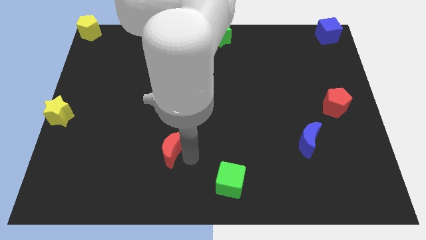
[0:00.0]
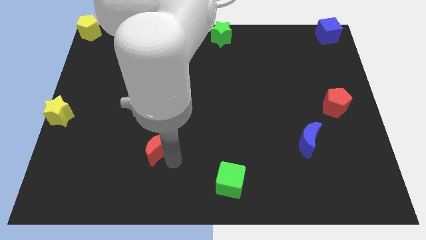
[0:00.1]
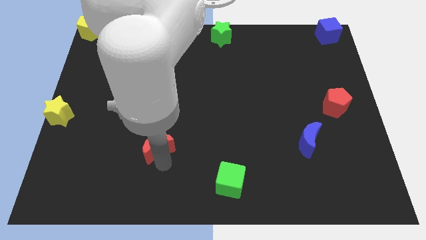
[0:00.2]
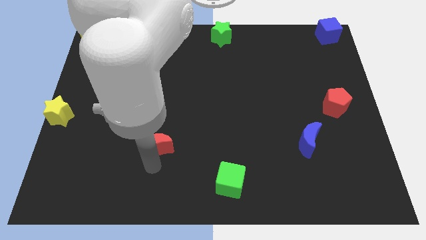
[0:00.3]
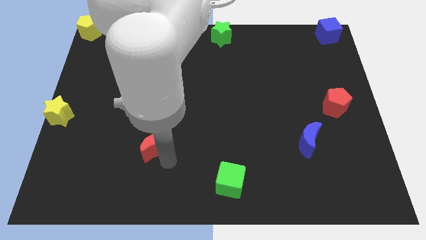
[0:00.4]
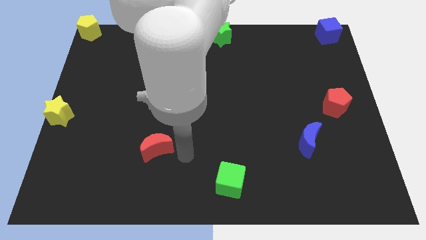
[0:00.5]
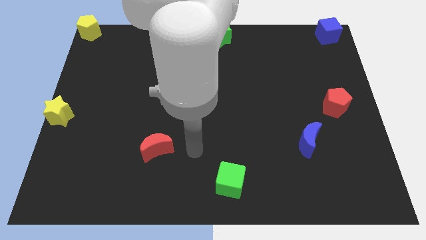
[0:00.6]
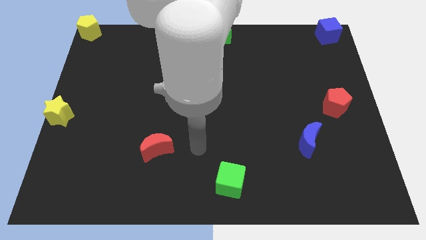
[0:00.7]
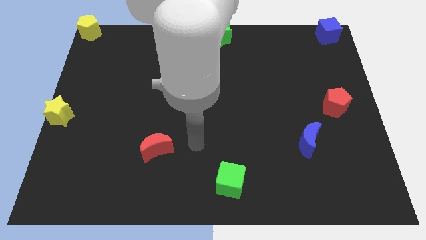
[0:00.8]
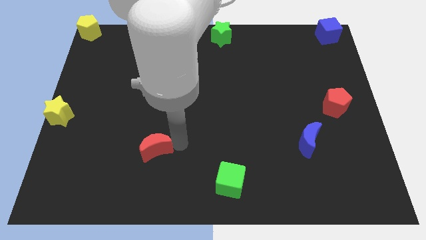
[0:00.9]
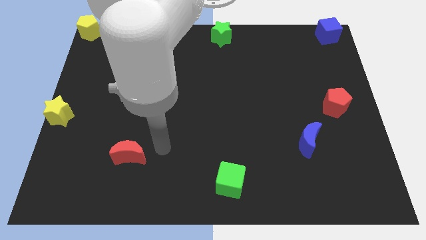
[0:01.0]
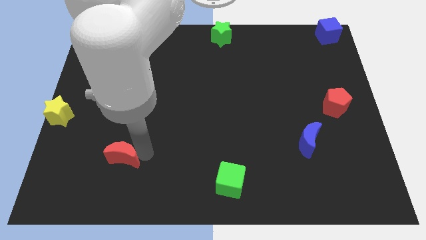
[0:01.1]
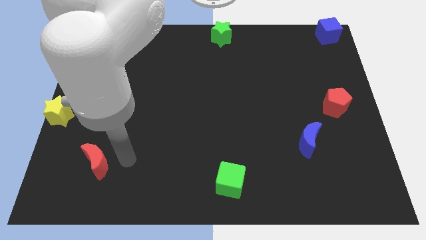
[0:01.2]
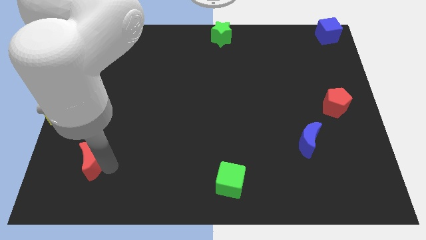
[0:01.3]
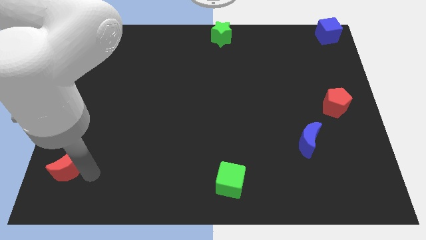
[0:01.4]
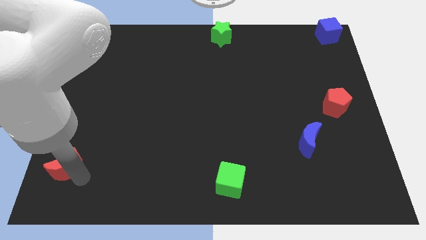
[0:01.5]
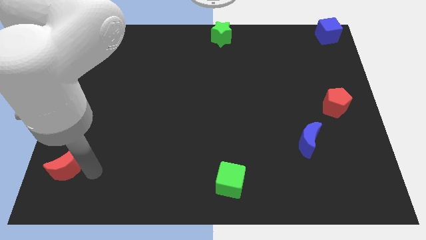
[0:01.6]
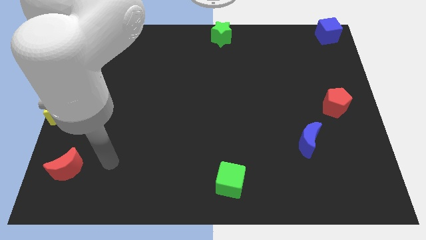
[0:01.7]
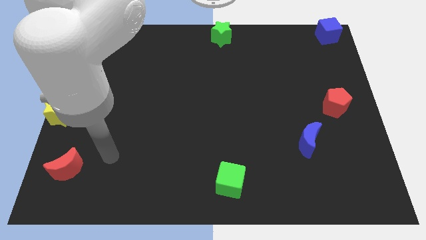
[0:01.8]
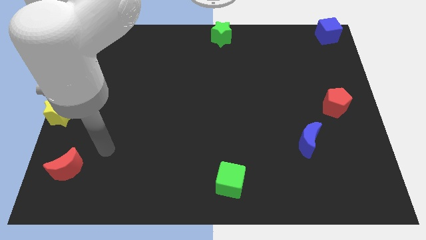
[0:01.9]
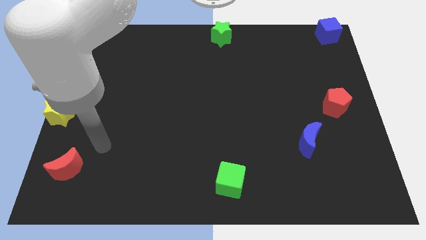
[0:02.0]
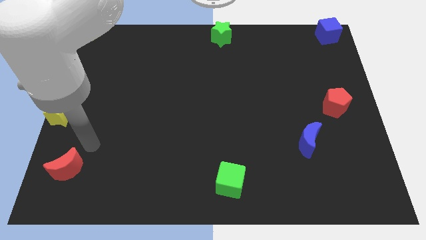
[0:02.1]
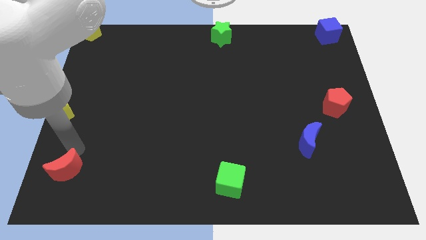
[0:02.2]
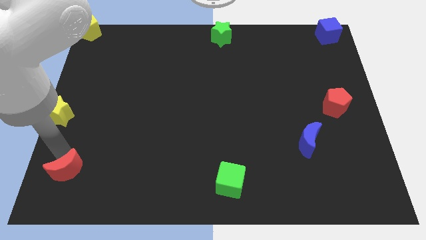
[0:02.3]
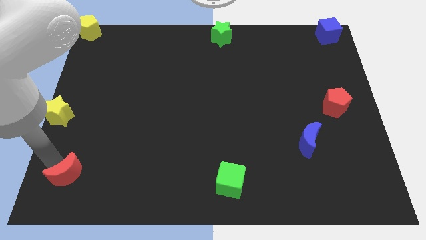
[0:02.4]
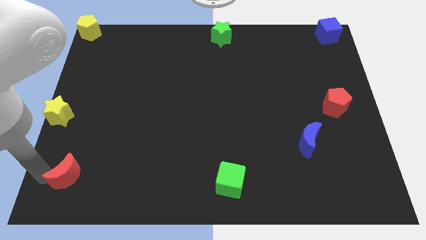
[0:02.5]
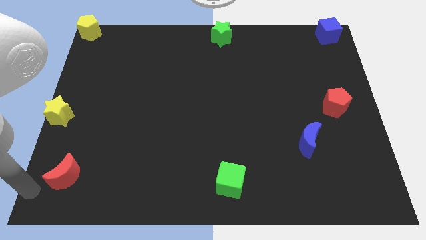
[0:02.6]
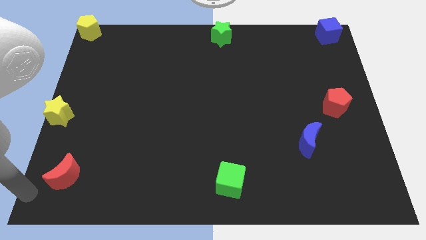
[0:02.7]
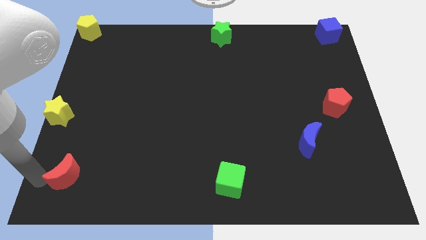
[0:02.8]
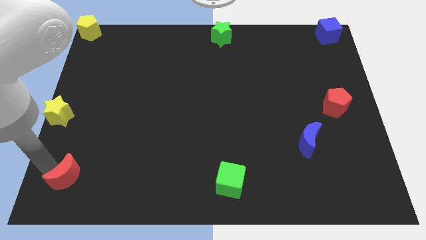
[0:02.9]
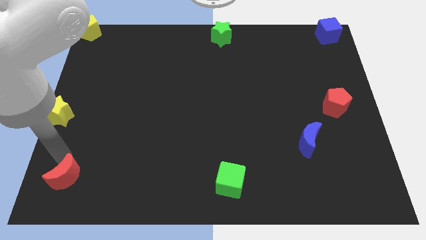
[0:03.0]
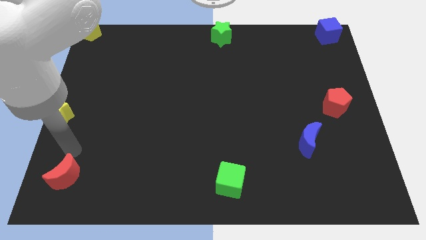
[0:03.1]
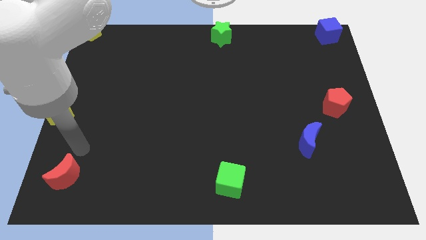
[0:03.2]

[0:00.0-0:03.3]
push the red moon to the bottom left

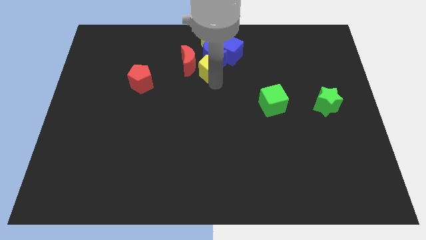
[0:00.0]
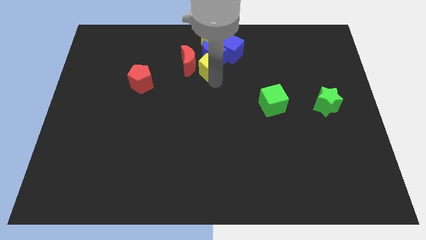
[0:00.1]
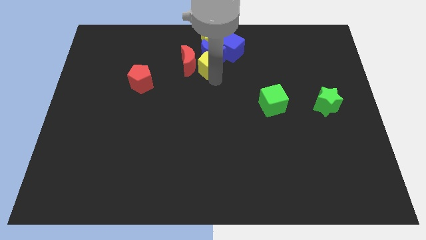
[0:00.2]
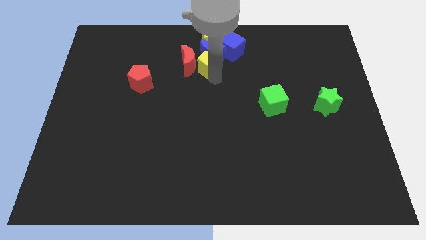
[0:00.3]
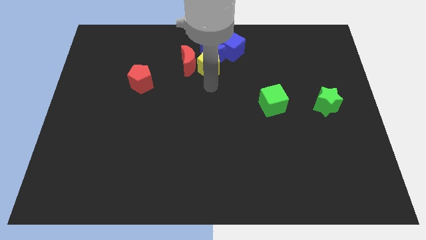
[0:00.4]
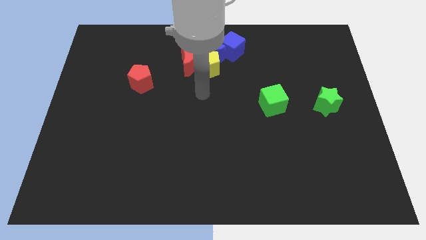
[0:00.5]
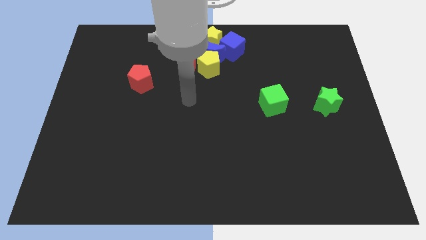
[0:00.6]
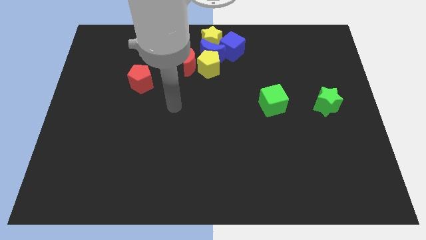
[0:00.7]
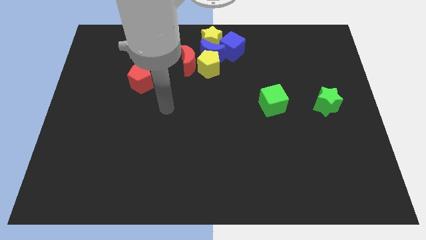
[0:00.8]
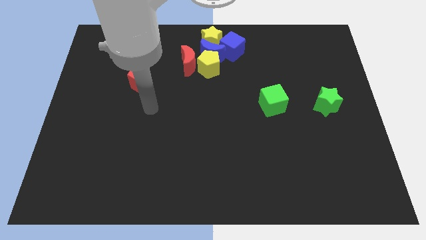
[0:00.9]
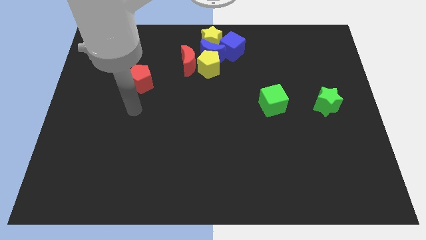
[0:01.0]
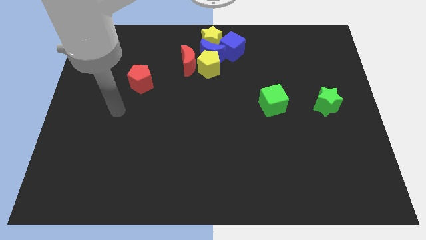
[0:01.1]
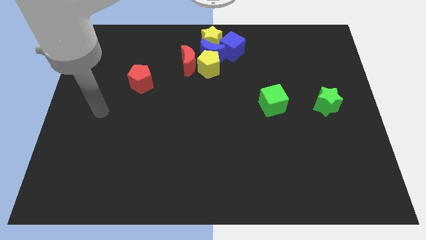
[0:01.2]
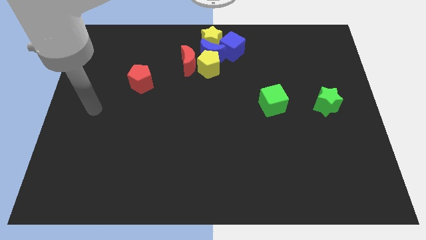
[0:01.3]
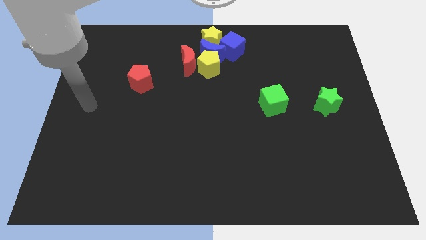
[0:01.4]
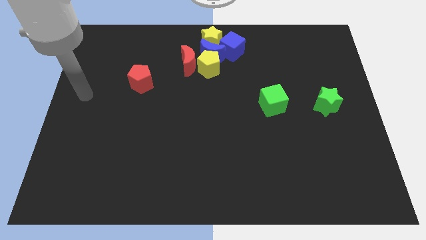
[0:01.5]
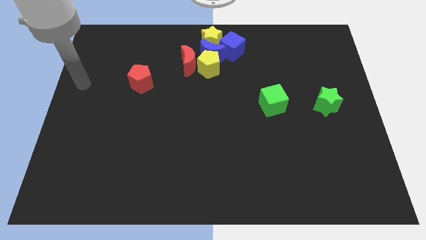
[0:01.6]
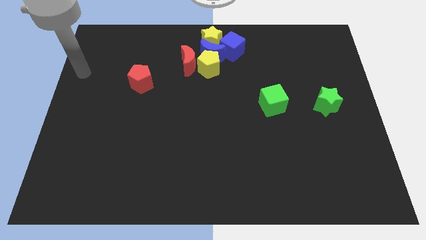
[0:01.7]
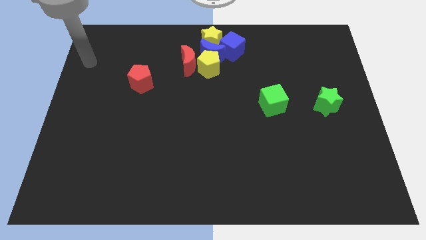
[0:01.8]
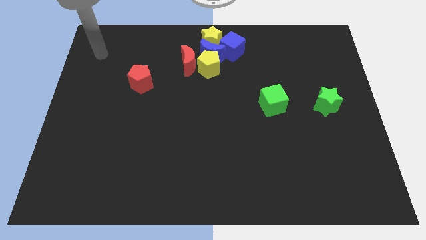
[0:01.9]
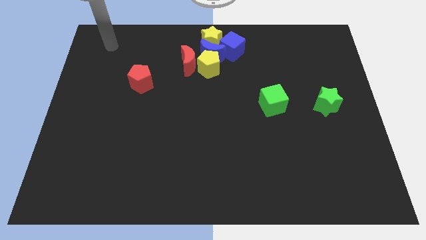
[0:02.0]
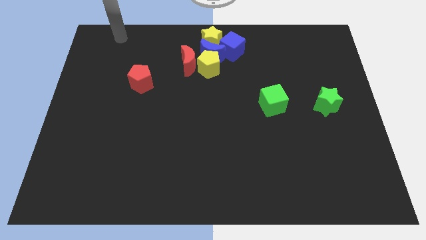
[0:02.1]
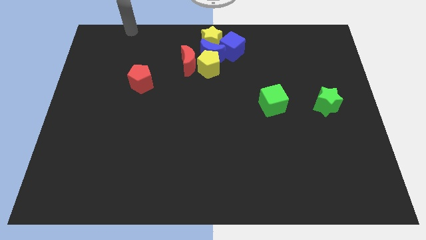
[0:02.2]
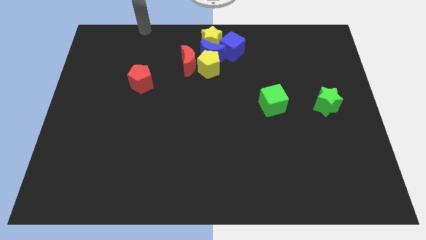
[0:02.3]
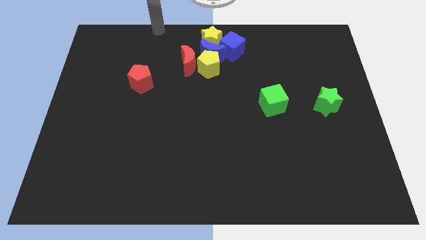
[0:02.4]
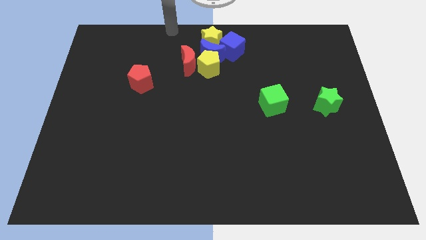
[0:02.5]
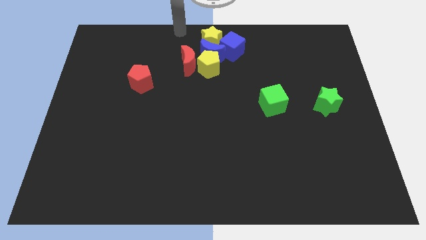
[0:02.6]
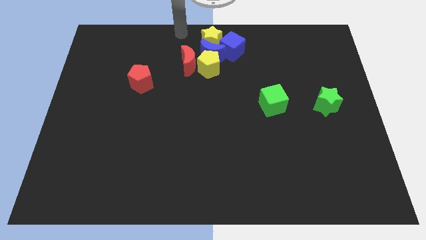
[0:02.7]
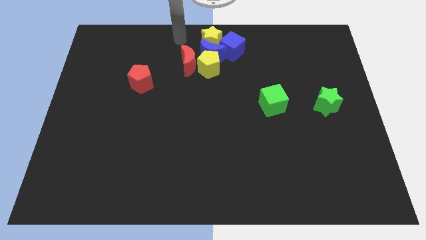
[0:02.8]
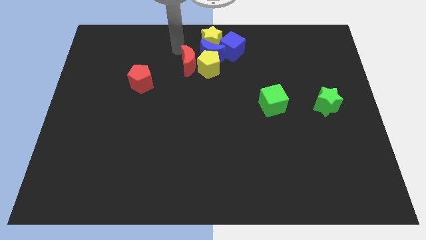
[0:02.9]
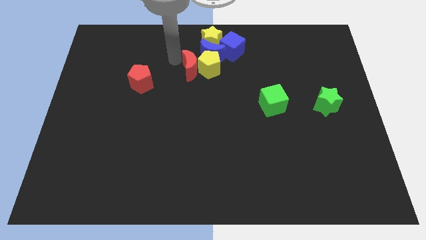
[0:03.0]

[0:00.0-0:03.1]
touch the top side of the red moon

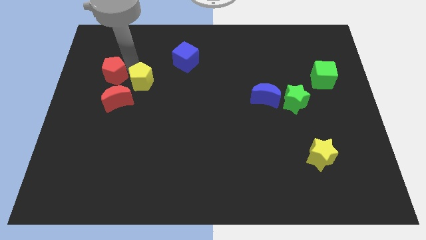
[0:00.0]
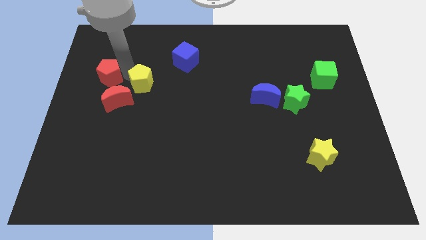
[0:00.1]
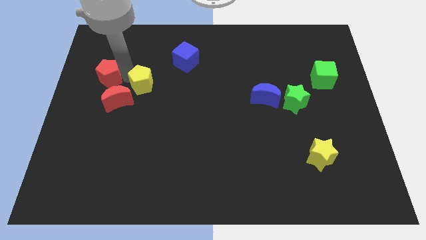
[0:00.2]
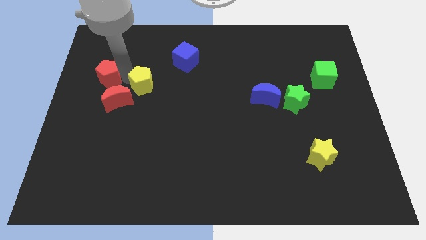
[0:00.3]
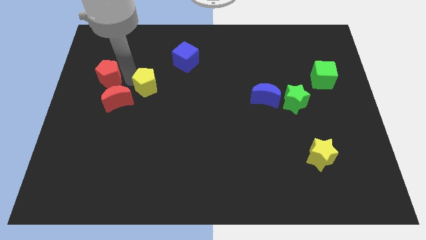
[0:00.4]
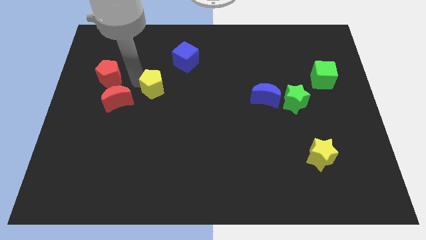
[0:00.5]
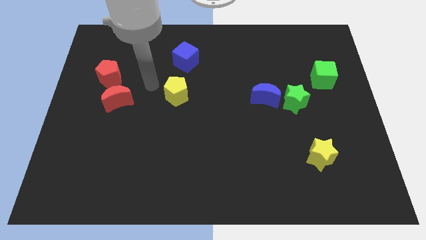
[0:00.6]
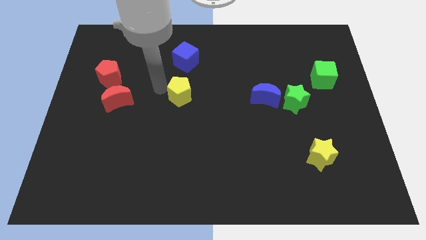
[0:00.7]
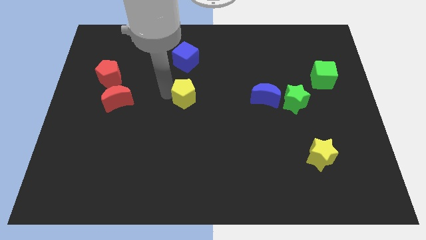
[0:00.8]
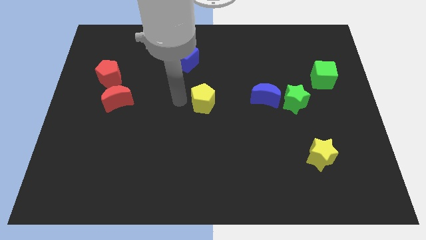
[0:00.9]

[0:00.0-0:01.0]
place the yellow pentagon below the blue cube

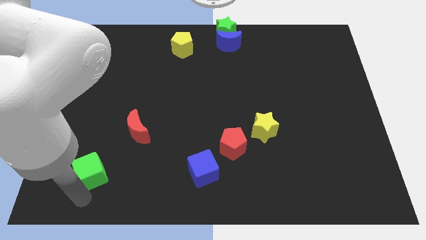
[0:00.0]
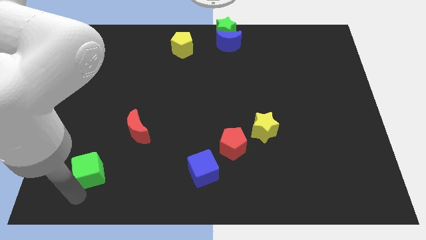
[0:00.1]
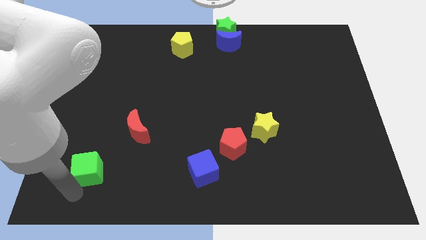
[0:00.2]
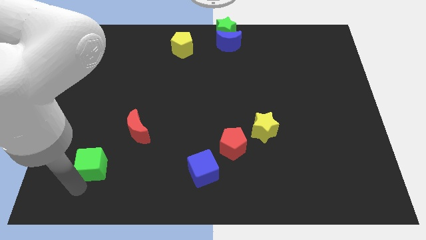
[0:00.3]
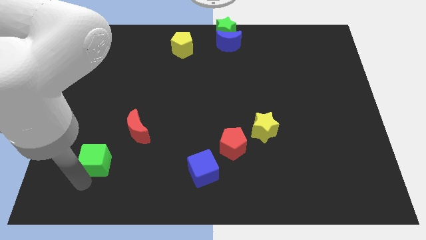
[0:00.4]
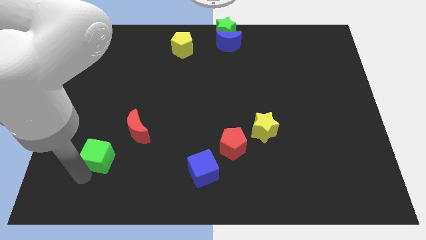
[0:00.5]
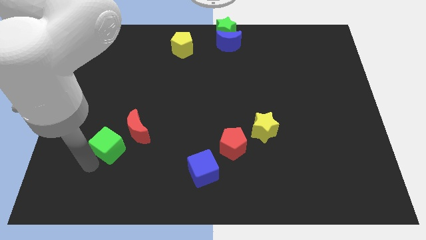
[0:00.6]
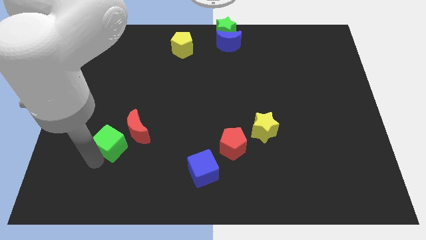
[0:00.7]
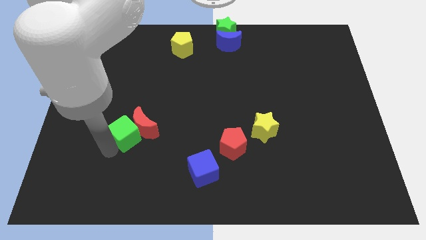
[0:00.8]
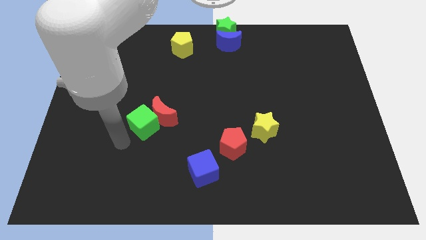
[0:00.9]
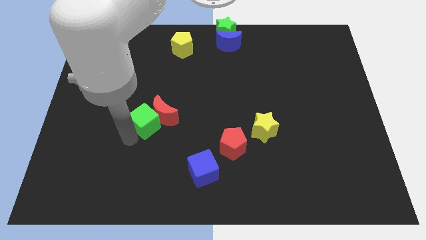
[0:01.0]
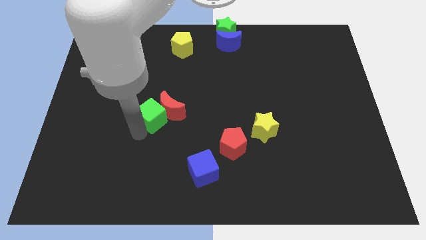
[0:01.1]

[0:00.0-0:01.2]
slide the green cube diagonally to the red crescent

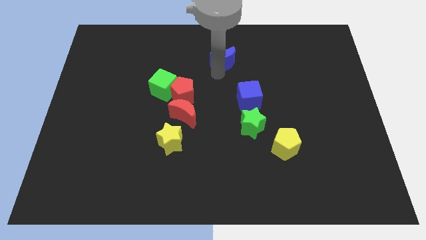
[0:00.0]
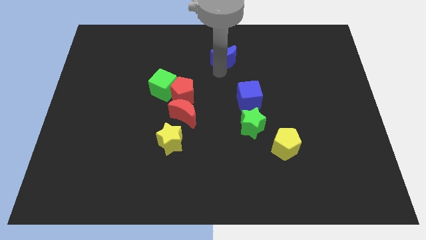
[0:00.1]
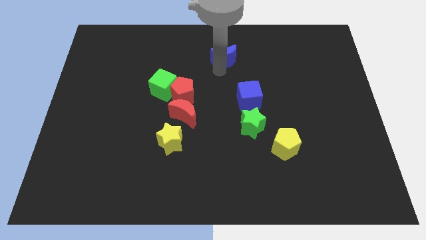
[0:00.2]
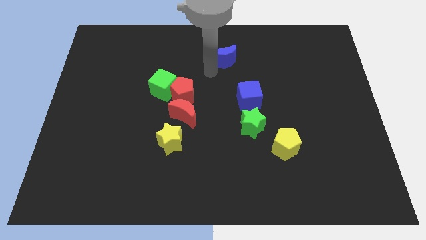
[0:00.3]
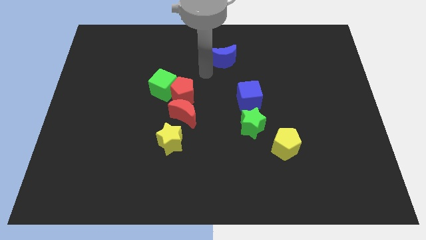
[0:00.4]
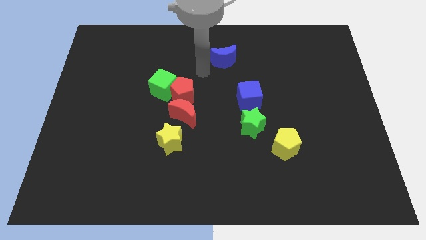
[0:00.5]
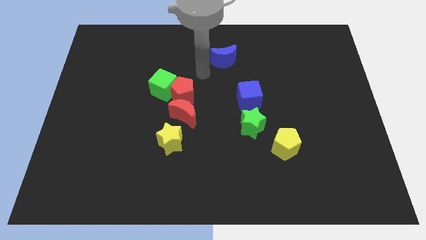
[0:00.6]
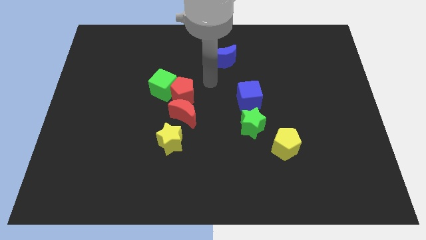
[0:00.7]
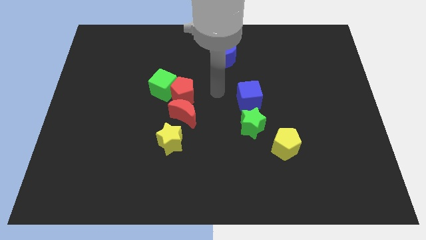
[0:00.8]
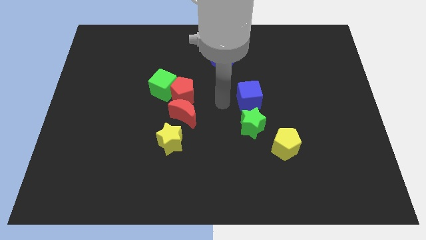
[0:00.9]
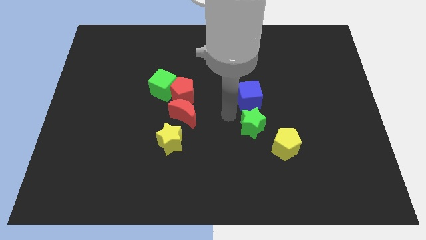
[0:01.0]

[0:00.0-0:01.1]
move your arm towards the green star block
